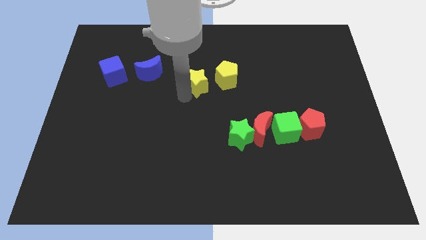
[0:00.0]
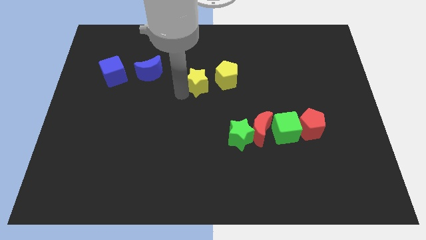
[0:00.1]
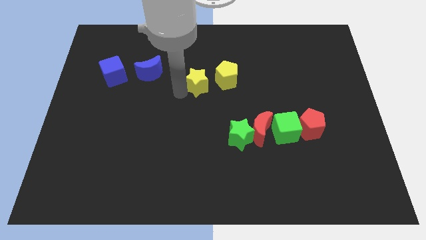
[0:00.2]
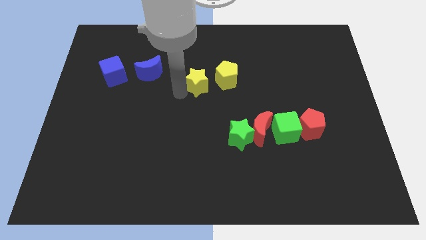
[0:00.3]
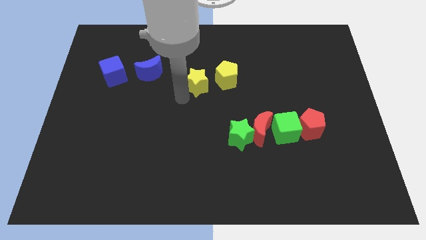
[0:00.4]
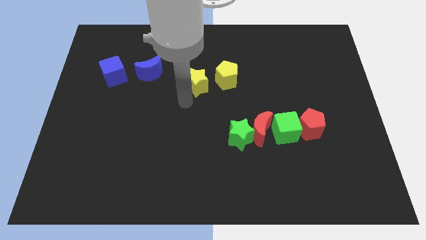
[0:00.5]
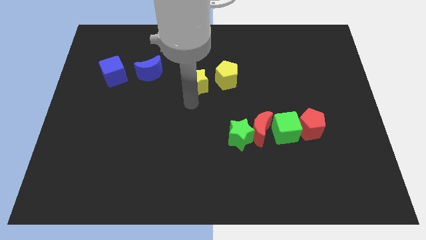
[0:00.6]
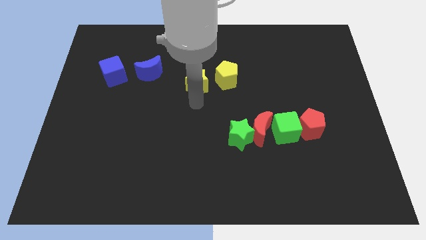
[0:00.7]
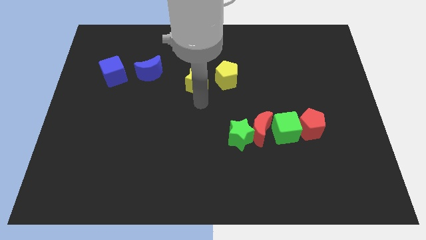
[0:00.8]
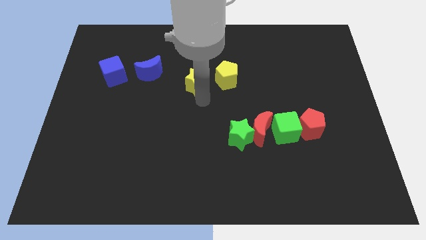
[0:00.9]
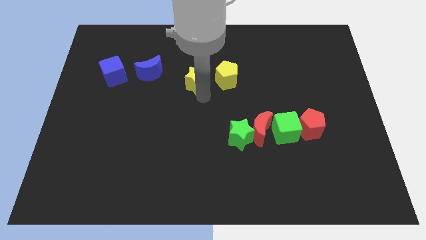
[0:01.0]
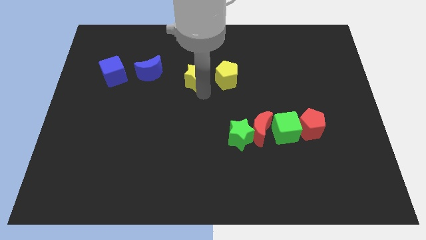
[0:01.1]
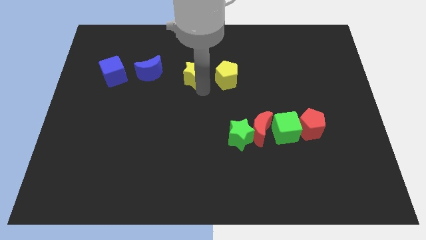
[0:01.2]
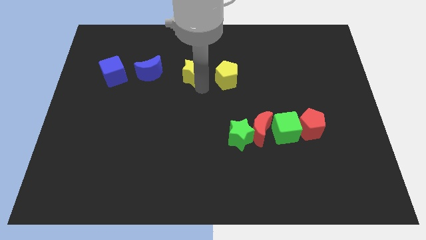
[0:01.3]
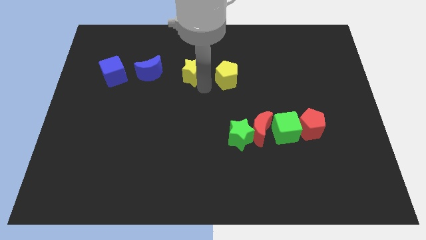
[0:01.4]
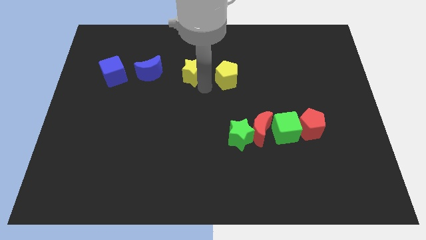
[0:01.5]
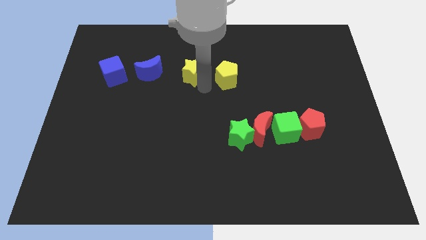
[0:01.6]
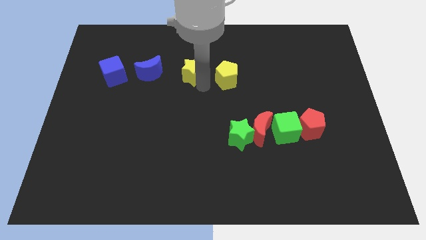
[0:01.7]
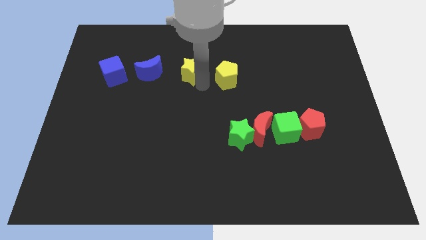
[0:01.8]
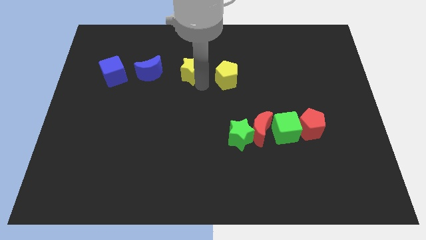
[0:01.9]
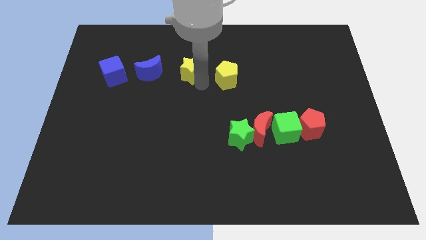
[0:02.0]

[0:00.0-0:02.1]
push yellow star slightly upwards

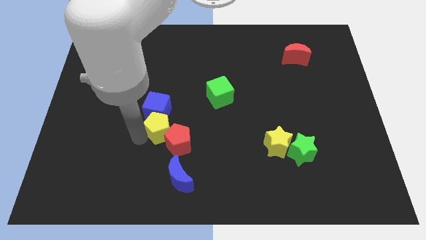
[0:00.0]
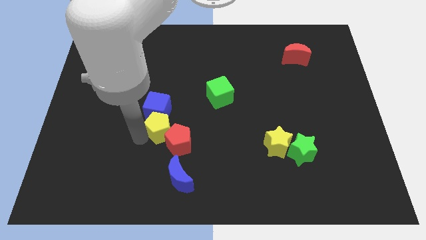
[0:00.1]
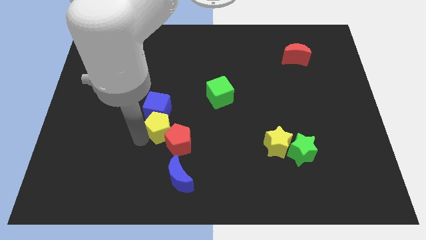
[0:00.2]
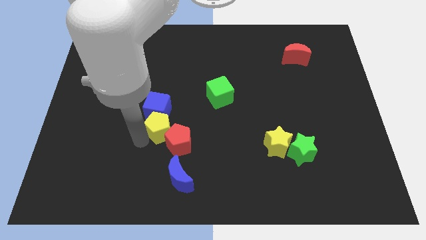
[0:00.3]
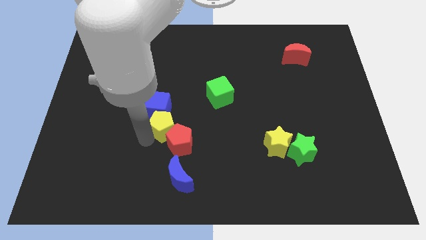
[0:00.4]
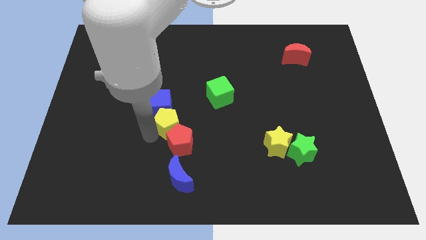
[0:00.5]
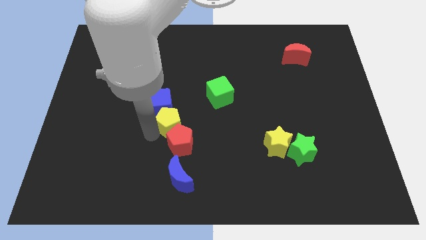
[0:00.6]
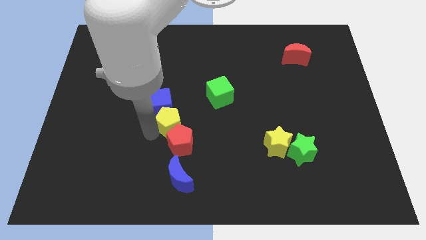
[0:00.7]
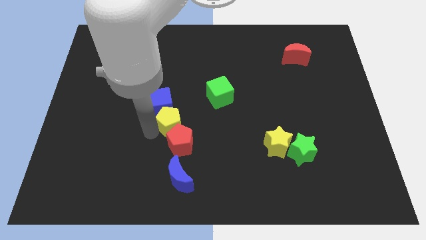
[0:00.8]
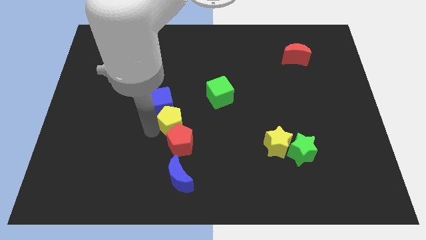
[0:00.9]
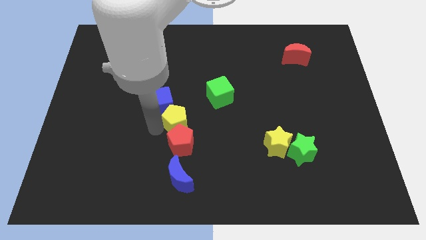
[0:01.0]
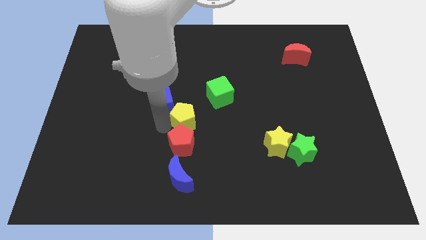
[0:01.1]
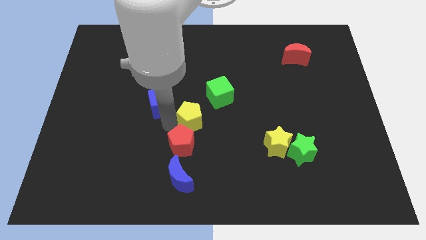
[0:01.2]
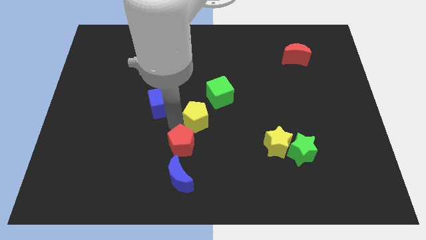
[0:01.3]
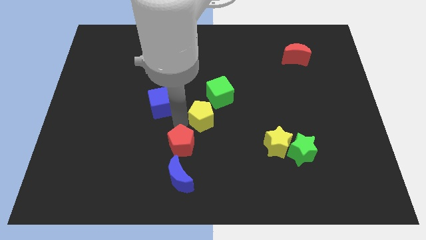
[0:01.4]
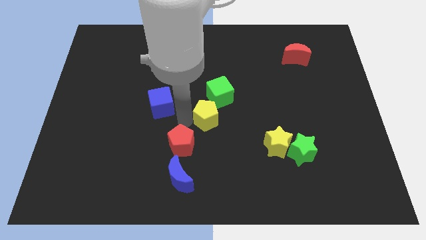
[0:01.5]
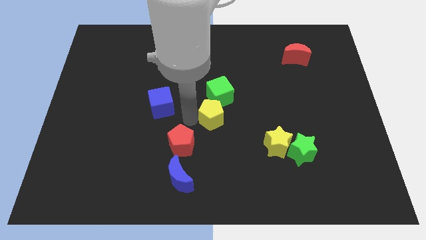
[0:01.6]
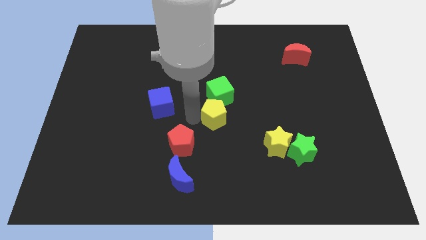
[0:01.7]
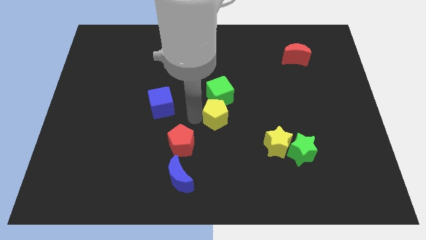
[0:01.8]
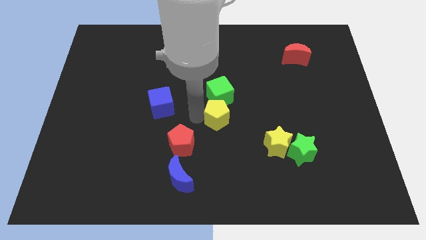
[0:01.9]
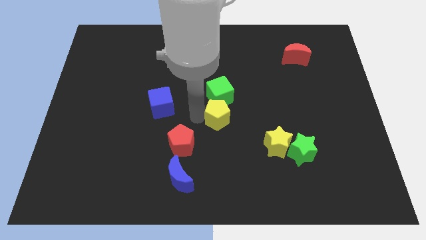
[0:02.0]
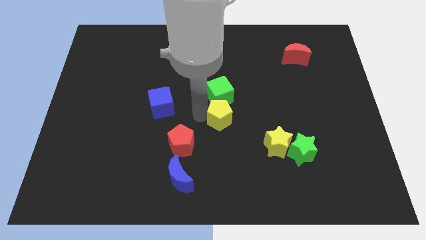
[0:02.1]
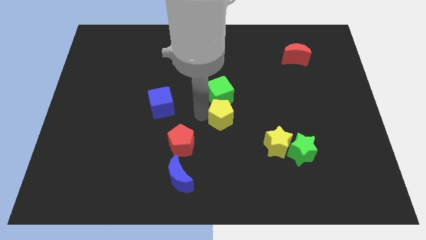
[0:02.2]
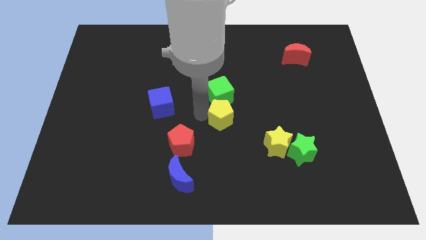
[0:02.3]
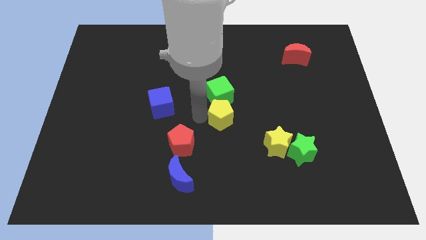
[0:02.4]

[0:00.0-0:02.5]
move the yellow pentagon away from the blue cube and red pentagon

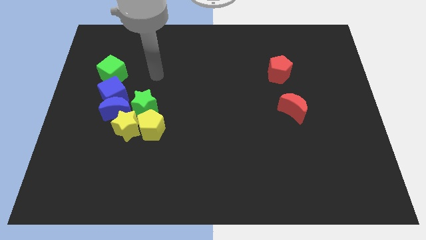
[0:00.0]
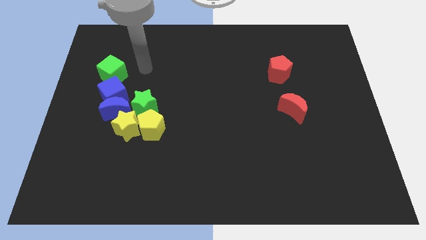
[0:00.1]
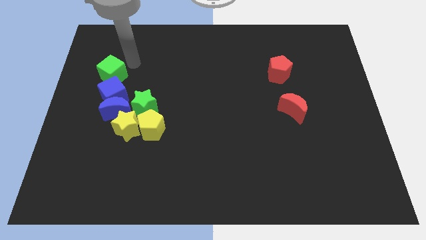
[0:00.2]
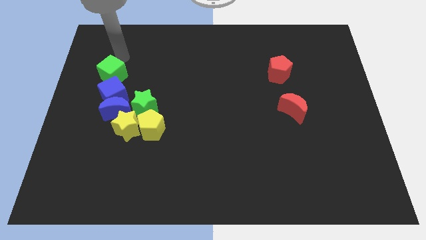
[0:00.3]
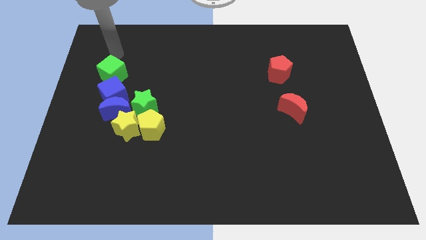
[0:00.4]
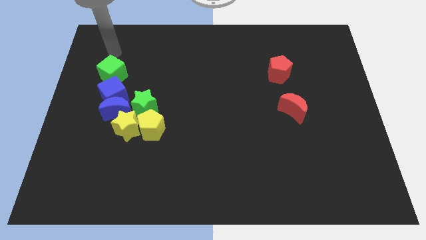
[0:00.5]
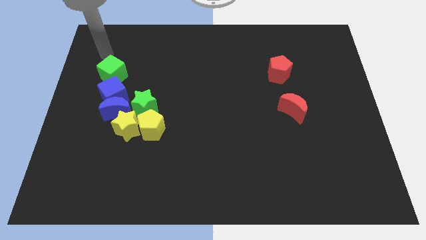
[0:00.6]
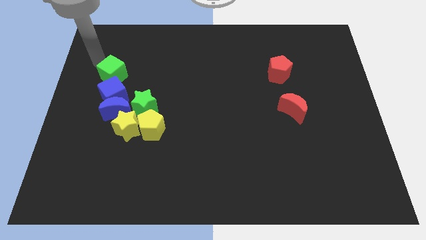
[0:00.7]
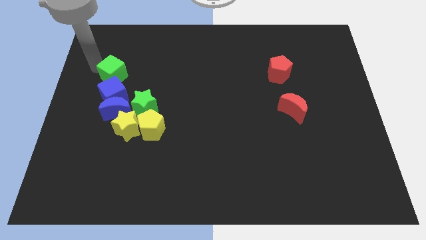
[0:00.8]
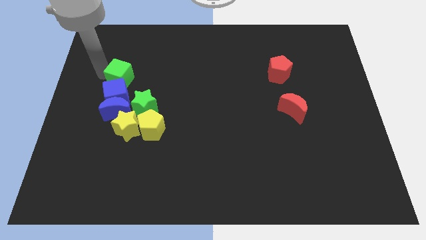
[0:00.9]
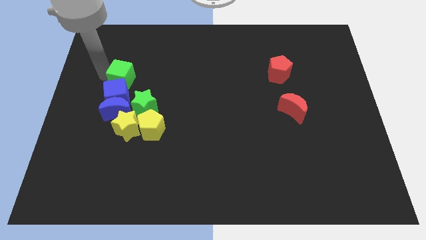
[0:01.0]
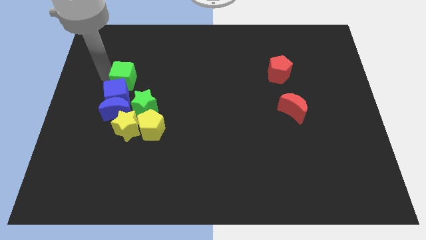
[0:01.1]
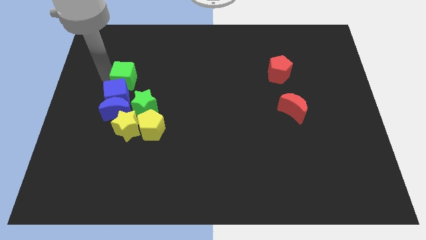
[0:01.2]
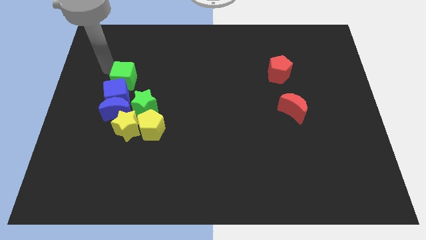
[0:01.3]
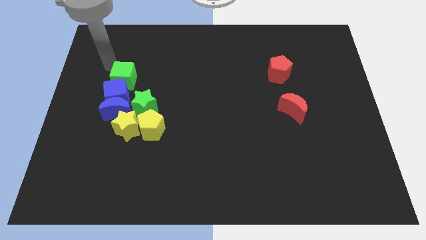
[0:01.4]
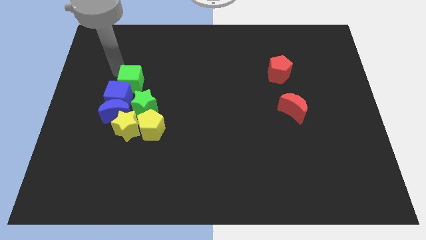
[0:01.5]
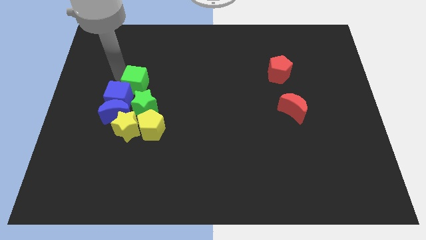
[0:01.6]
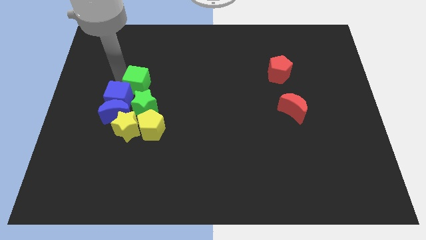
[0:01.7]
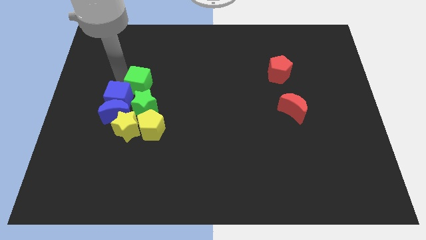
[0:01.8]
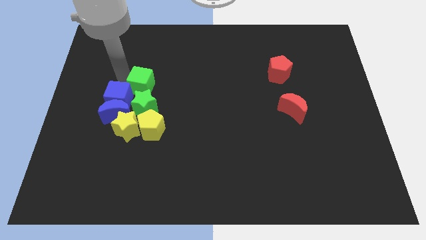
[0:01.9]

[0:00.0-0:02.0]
move the gren cube above the green star

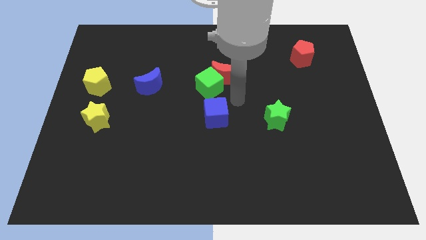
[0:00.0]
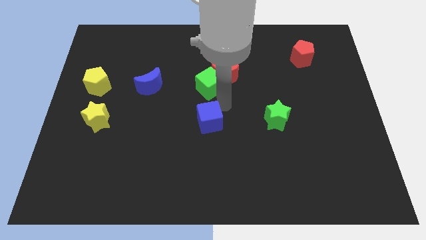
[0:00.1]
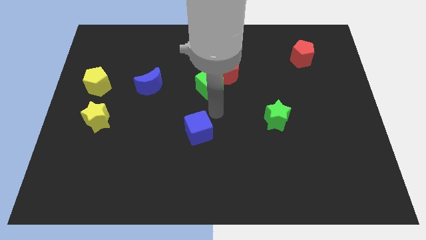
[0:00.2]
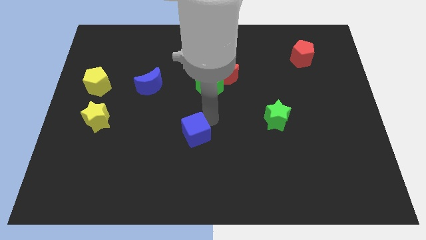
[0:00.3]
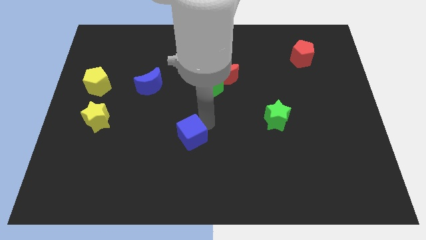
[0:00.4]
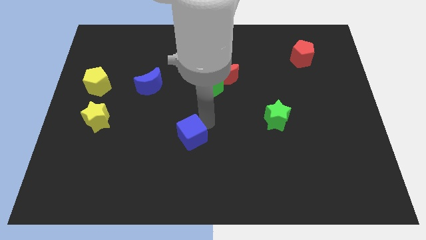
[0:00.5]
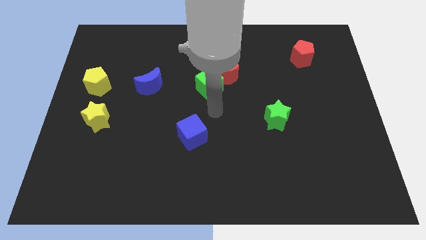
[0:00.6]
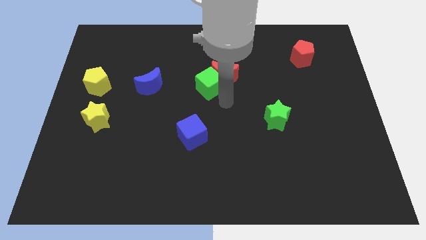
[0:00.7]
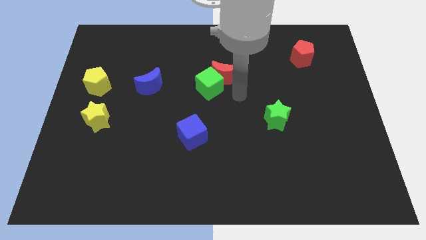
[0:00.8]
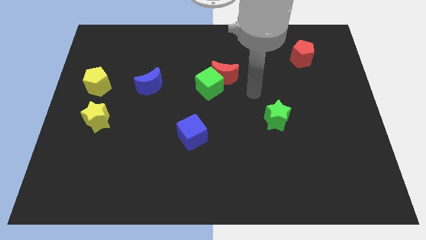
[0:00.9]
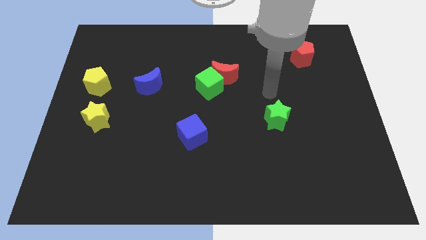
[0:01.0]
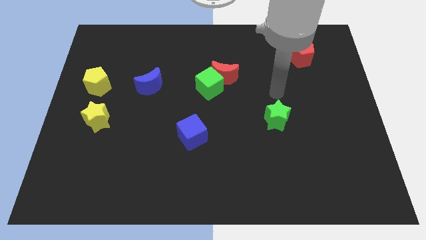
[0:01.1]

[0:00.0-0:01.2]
move the blue cube slightly down

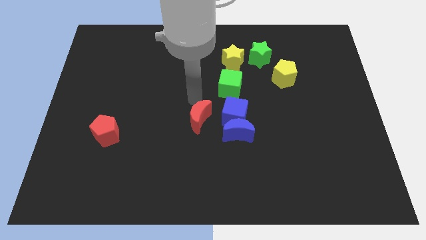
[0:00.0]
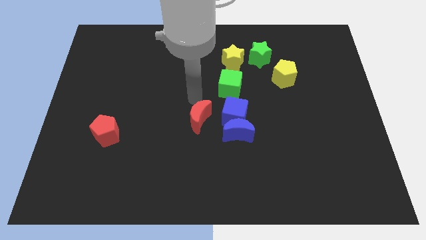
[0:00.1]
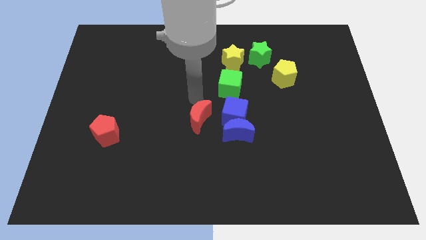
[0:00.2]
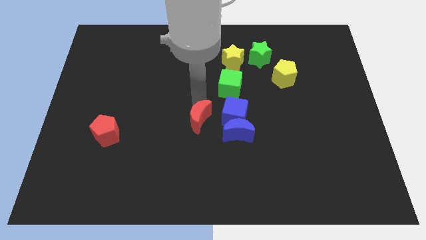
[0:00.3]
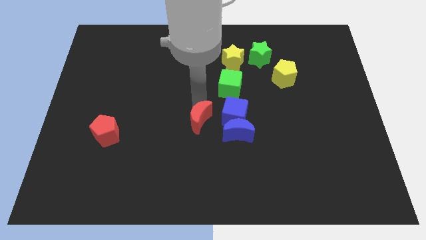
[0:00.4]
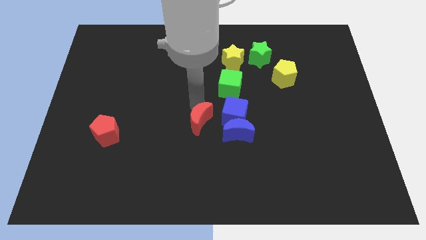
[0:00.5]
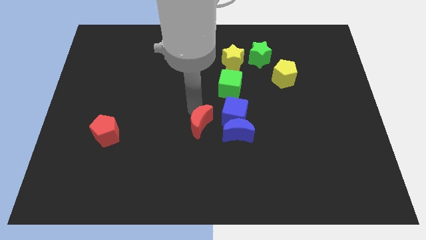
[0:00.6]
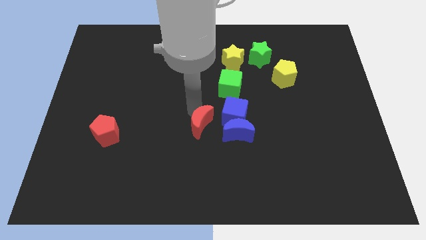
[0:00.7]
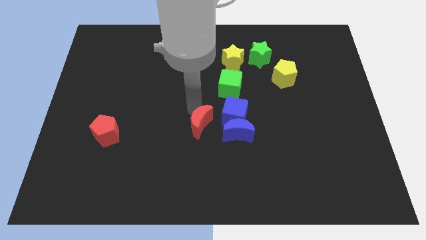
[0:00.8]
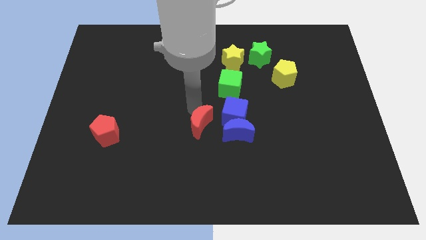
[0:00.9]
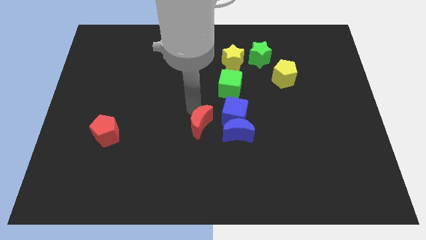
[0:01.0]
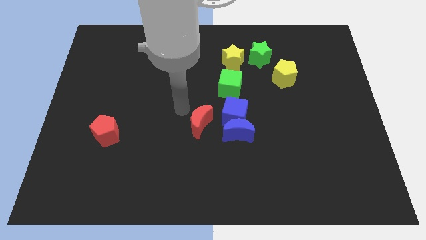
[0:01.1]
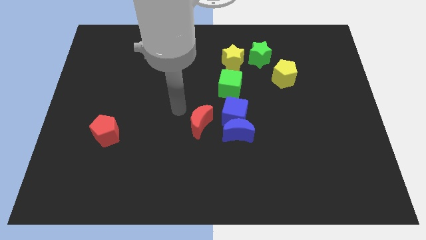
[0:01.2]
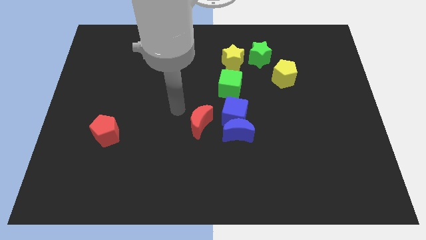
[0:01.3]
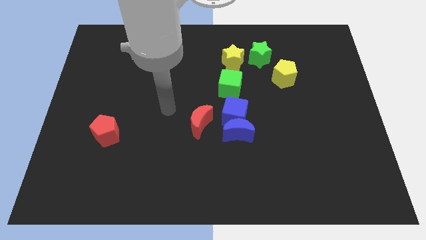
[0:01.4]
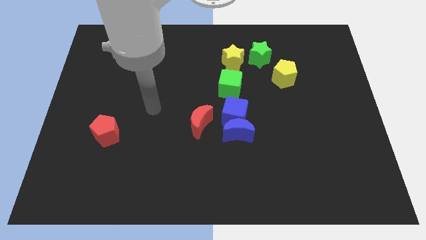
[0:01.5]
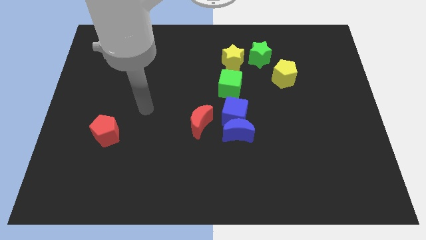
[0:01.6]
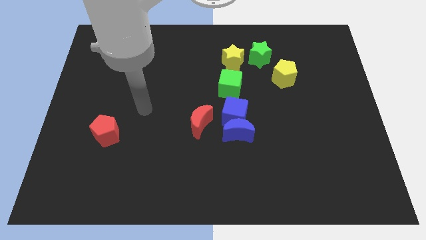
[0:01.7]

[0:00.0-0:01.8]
move the red mon slightly to the bottom
